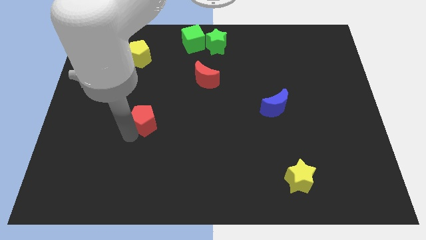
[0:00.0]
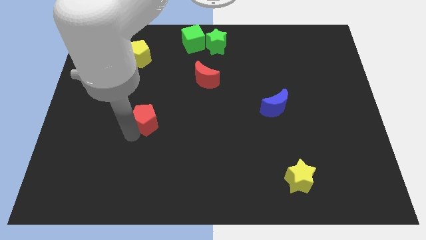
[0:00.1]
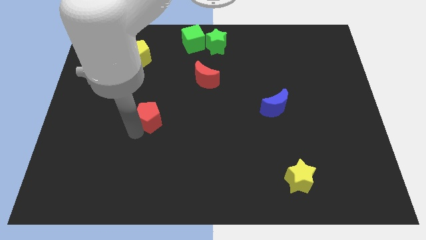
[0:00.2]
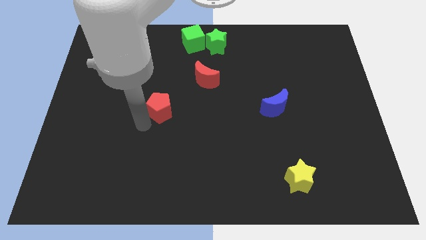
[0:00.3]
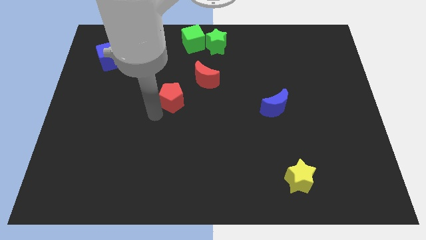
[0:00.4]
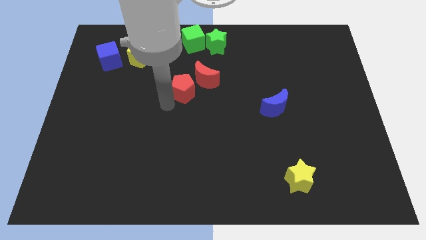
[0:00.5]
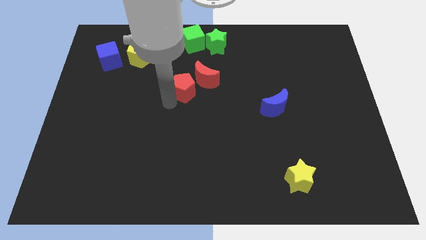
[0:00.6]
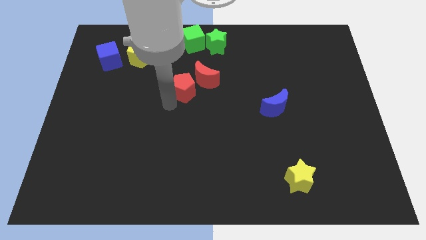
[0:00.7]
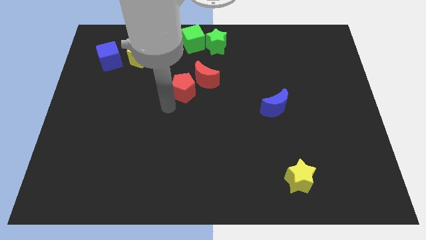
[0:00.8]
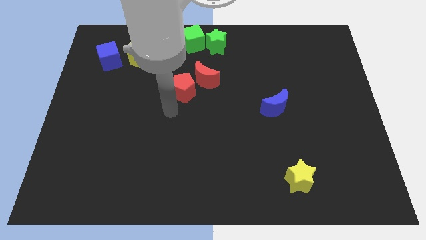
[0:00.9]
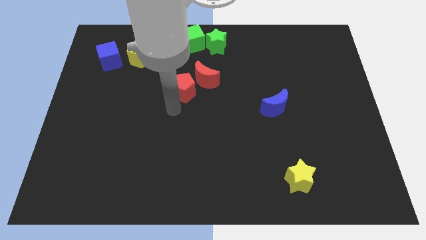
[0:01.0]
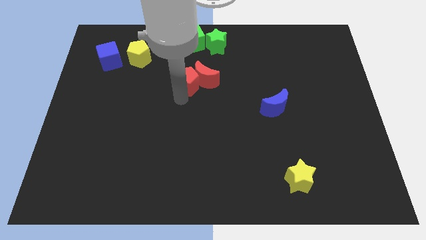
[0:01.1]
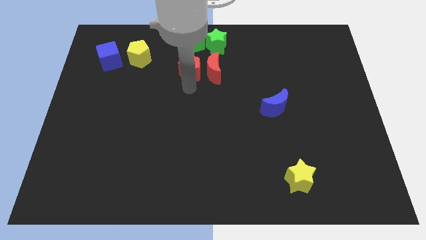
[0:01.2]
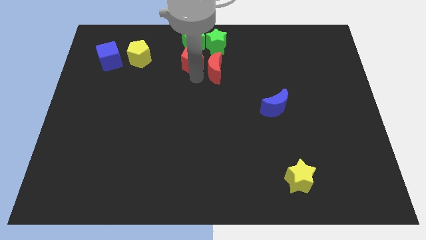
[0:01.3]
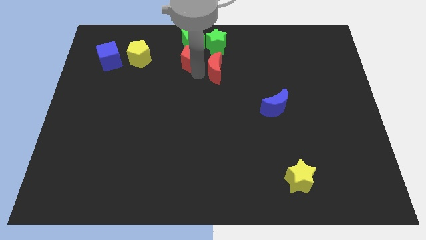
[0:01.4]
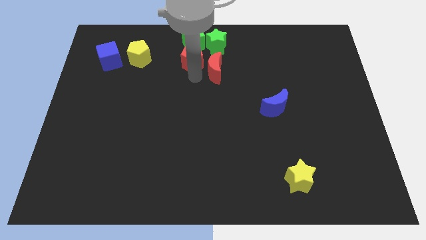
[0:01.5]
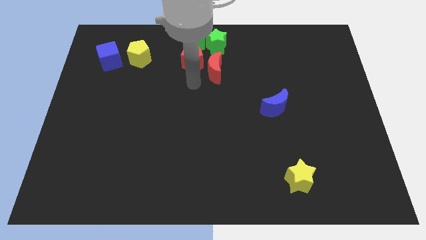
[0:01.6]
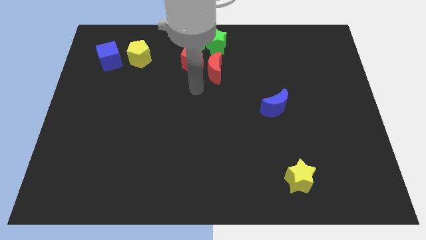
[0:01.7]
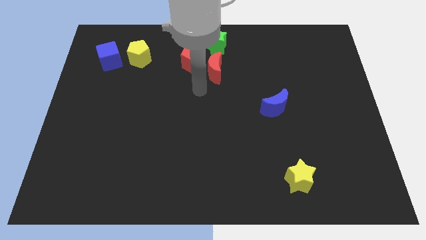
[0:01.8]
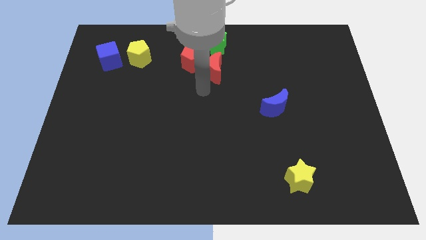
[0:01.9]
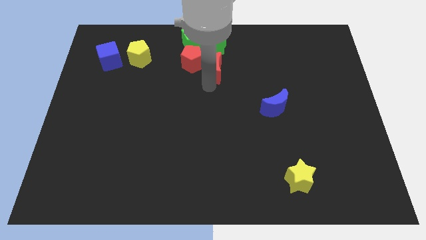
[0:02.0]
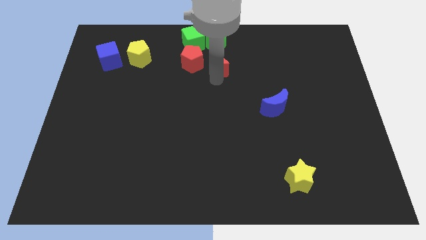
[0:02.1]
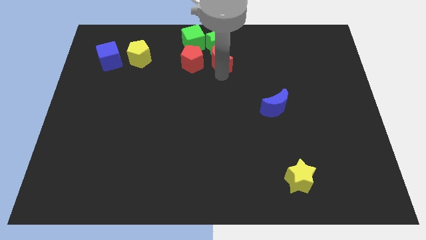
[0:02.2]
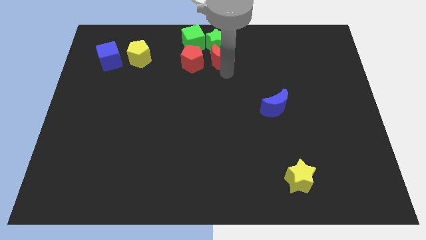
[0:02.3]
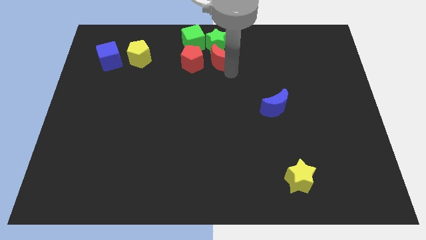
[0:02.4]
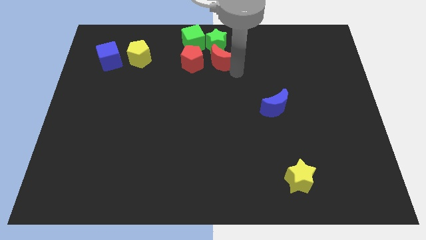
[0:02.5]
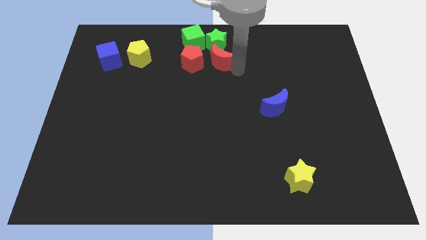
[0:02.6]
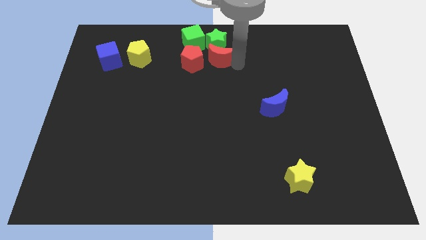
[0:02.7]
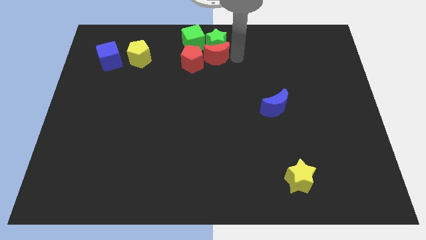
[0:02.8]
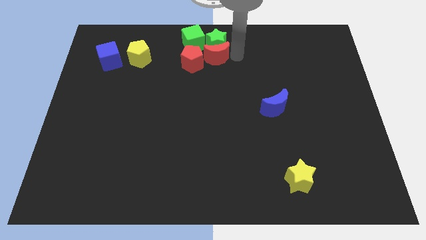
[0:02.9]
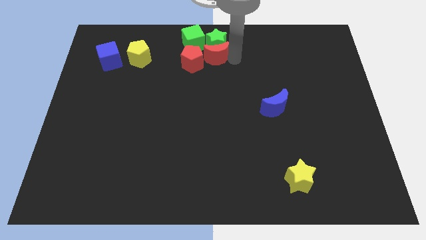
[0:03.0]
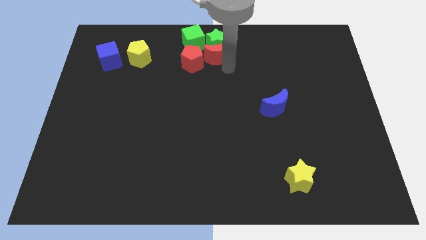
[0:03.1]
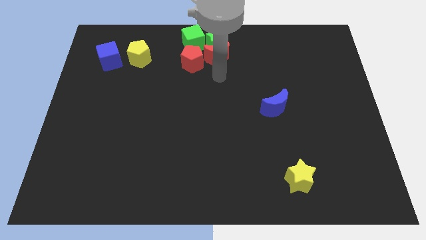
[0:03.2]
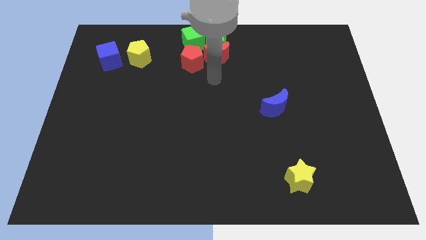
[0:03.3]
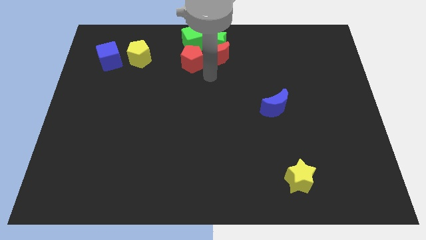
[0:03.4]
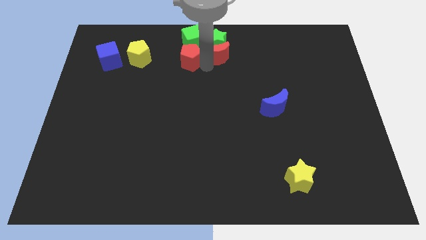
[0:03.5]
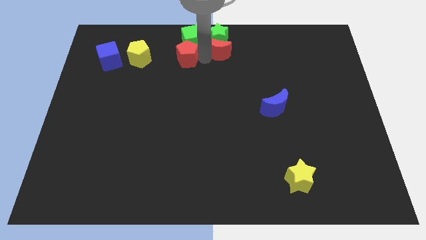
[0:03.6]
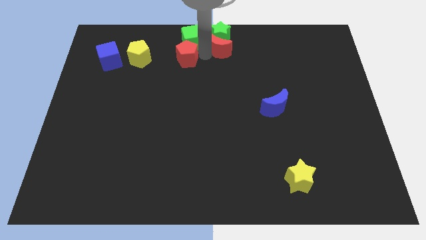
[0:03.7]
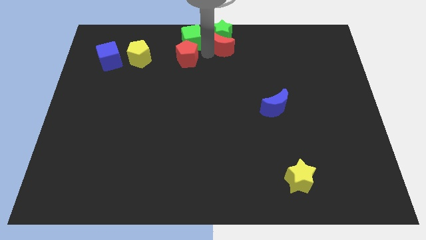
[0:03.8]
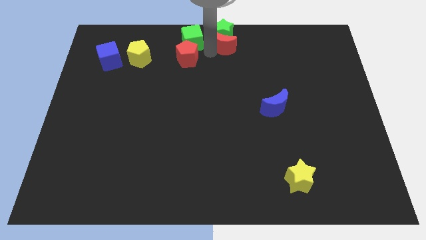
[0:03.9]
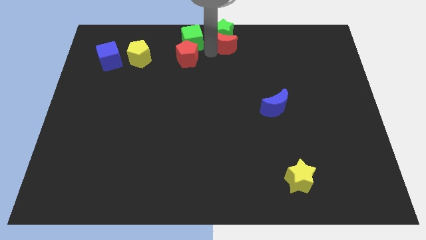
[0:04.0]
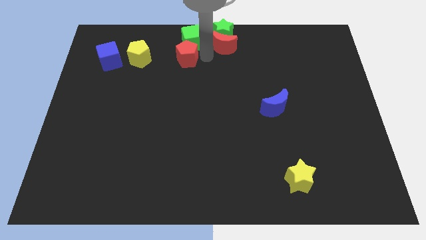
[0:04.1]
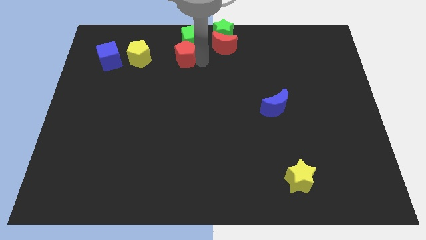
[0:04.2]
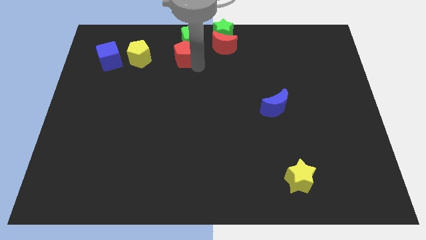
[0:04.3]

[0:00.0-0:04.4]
push the red crescent into the green star

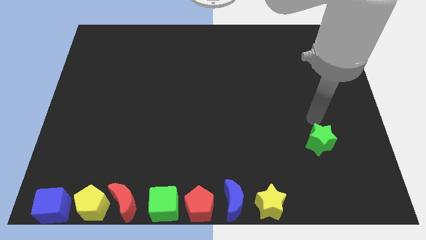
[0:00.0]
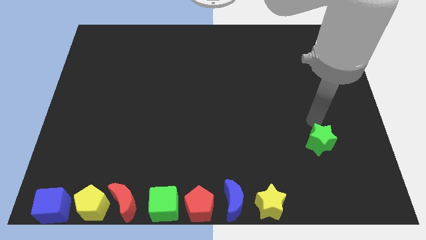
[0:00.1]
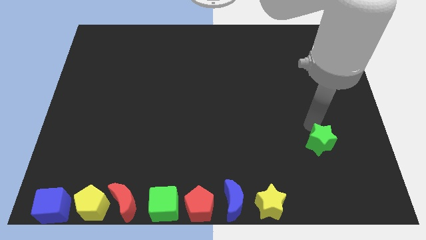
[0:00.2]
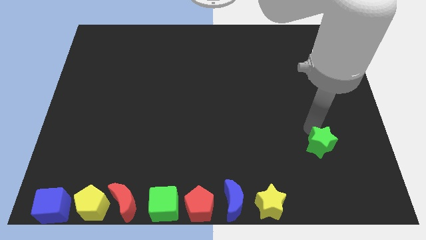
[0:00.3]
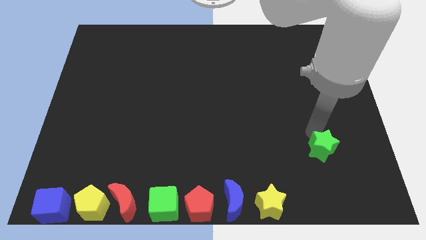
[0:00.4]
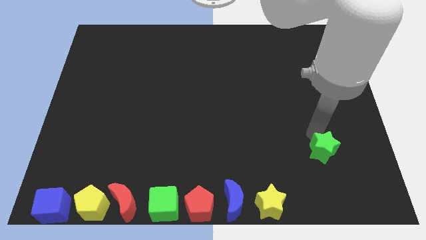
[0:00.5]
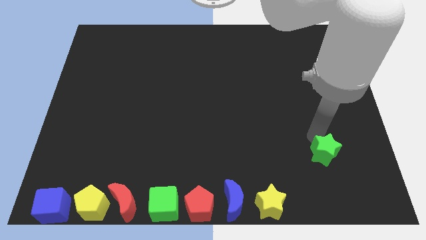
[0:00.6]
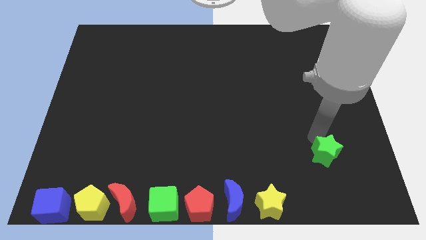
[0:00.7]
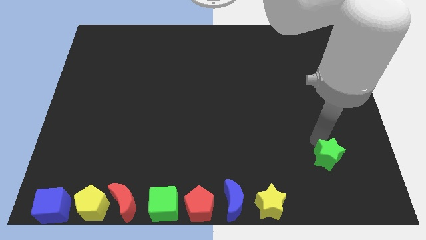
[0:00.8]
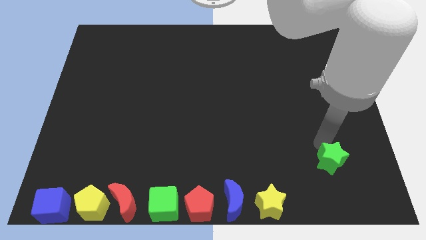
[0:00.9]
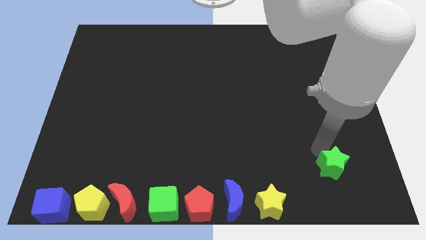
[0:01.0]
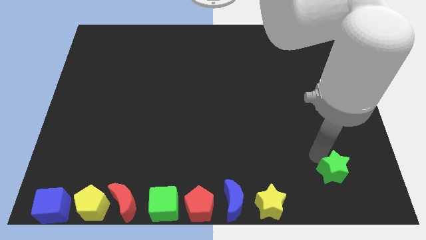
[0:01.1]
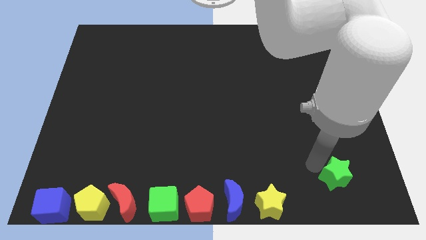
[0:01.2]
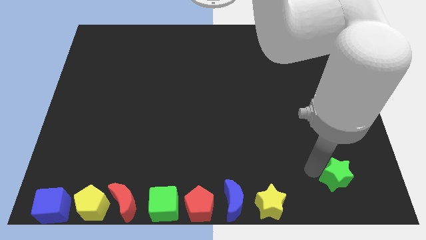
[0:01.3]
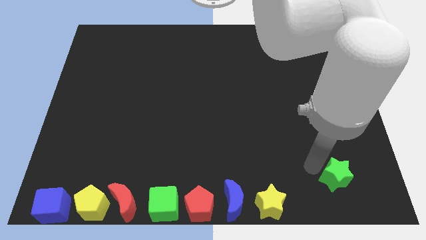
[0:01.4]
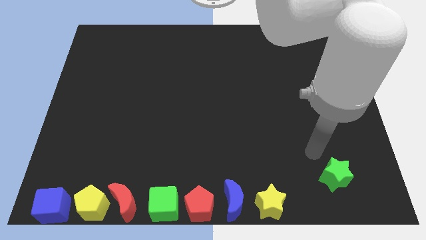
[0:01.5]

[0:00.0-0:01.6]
push the green star slightly down

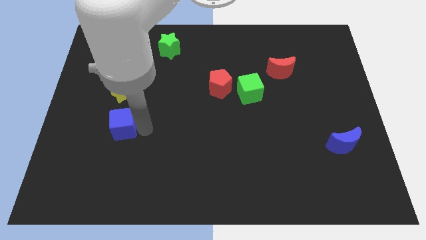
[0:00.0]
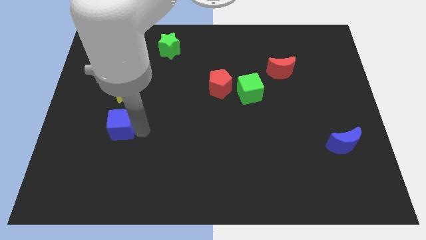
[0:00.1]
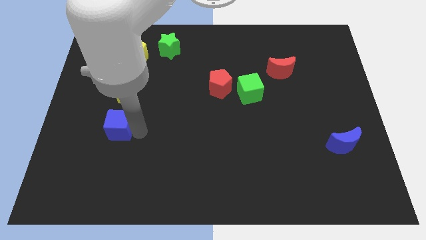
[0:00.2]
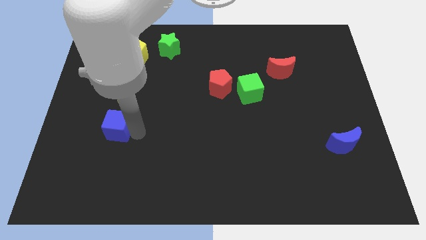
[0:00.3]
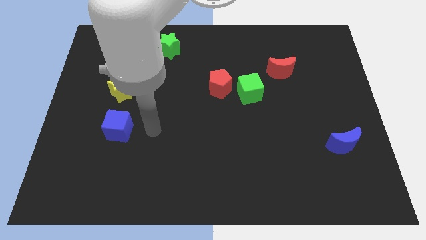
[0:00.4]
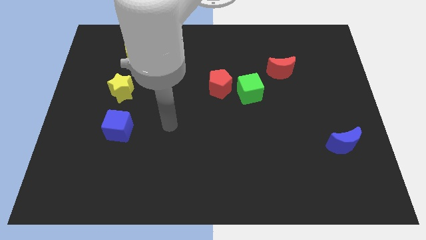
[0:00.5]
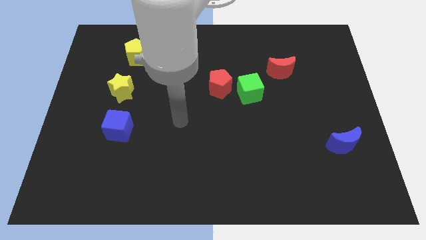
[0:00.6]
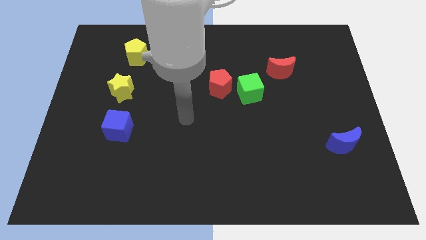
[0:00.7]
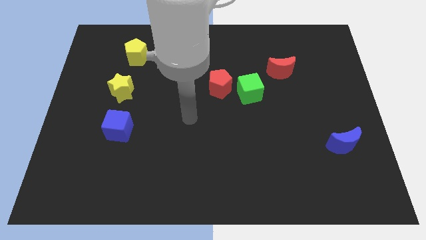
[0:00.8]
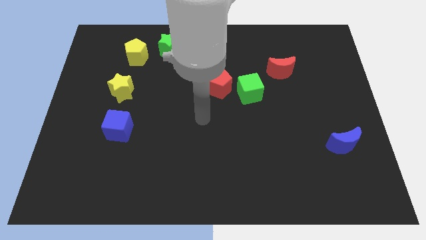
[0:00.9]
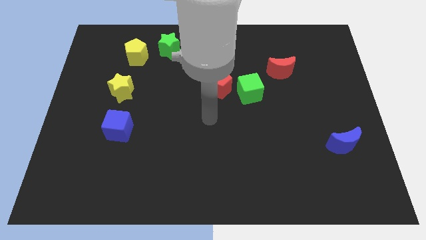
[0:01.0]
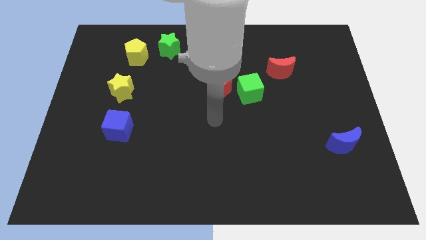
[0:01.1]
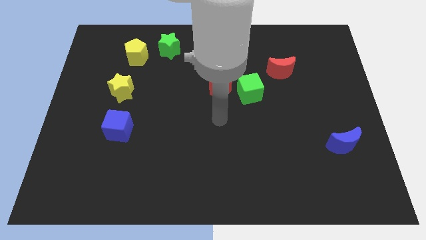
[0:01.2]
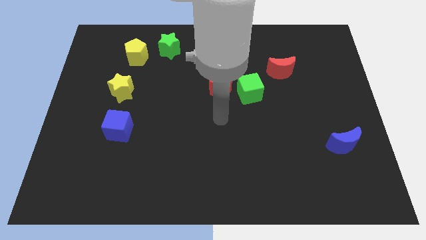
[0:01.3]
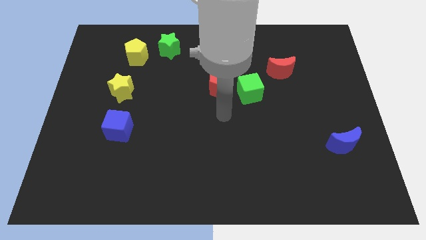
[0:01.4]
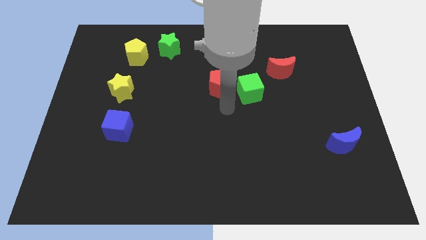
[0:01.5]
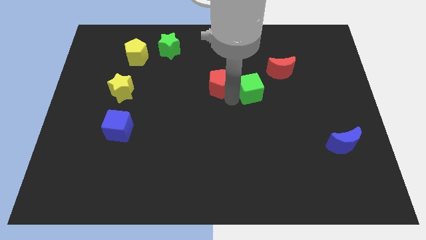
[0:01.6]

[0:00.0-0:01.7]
place the blue cube to the bottom of the yellow star

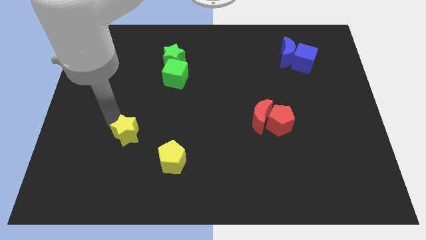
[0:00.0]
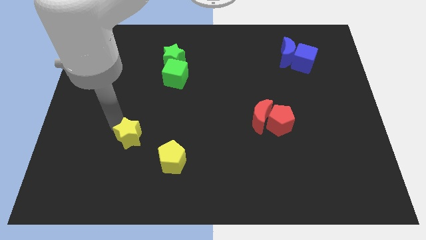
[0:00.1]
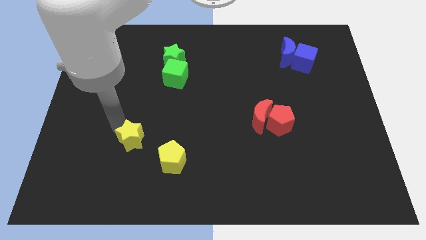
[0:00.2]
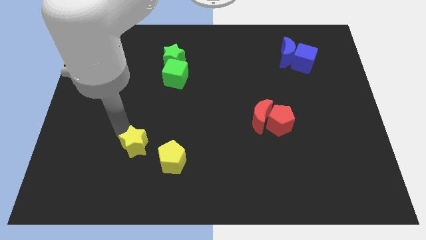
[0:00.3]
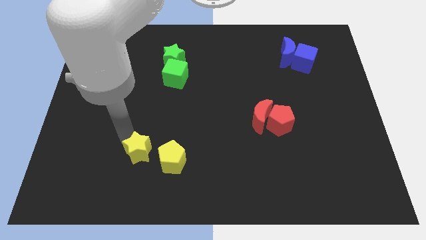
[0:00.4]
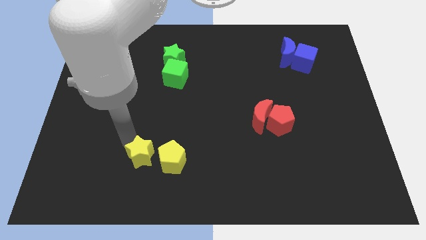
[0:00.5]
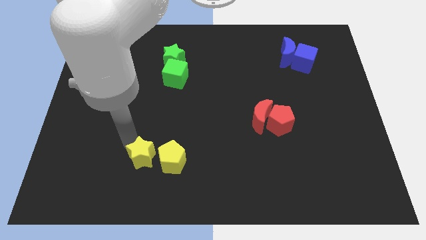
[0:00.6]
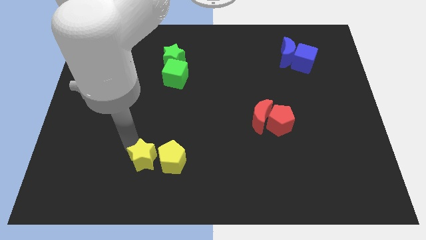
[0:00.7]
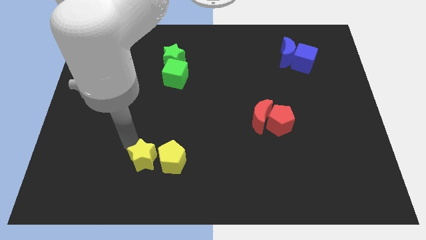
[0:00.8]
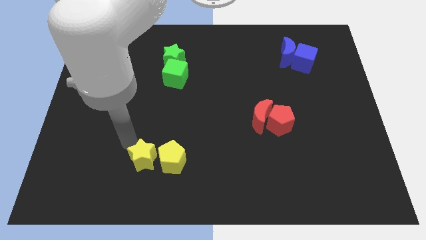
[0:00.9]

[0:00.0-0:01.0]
move the yellow star to the yellow pentagon

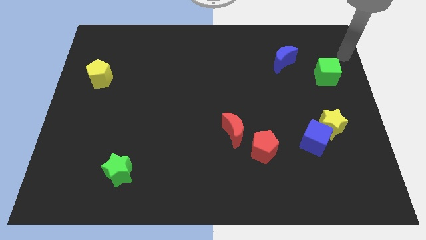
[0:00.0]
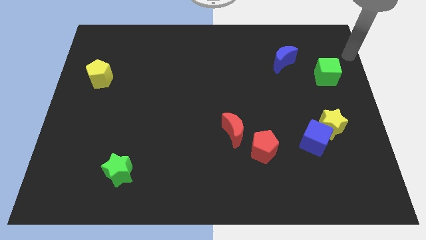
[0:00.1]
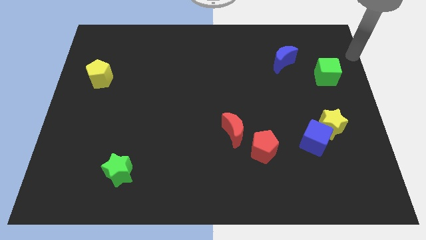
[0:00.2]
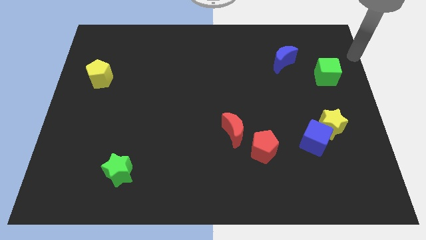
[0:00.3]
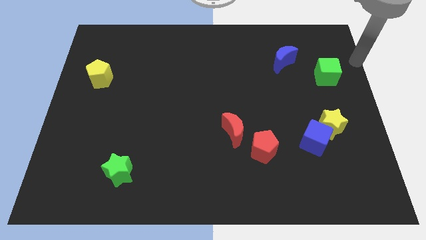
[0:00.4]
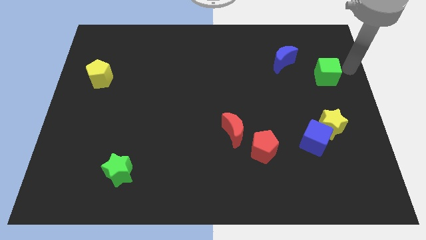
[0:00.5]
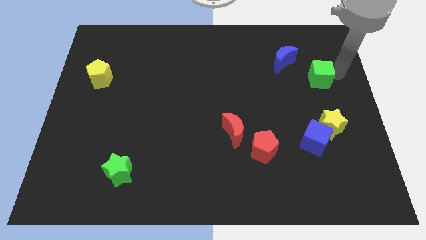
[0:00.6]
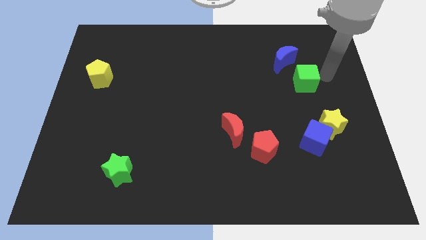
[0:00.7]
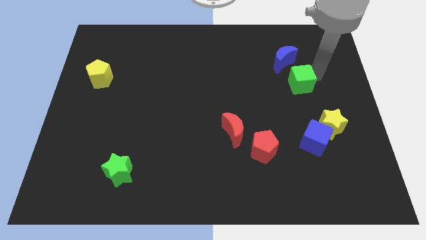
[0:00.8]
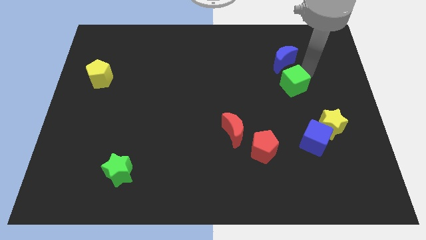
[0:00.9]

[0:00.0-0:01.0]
move green cube below the blue moon
